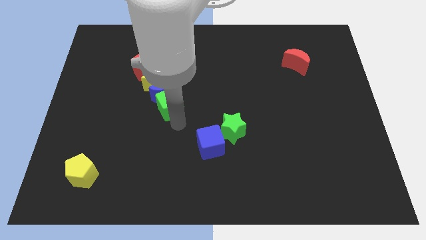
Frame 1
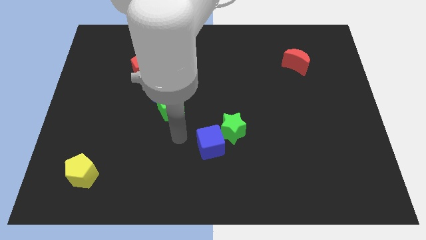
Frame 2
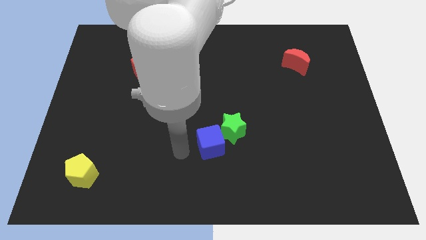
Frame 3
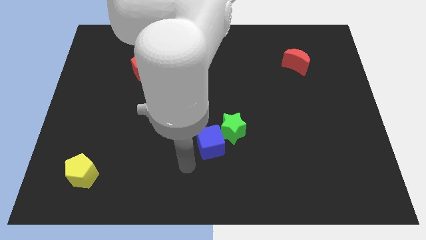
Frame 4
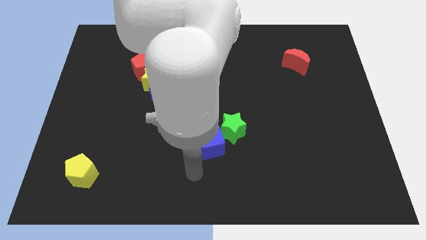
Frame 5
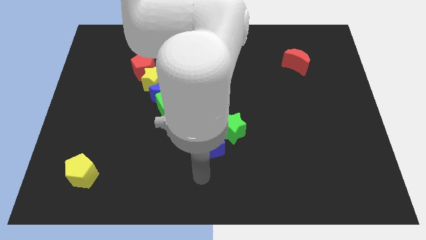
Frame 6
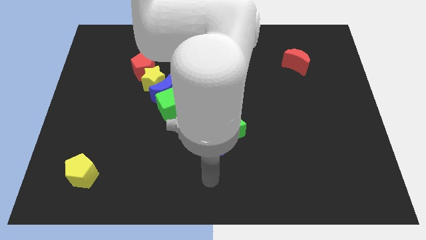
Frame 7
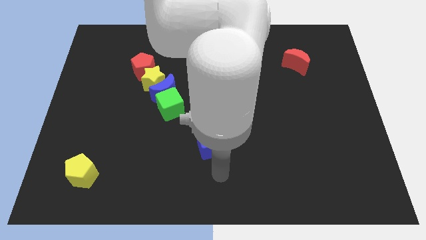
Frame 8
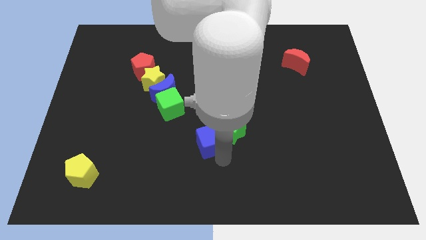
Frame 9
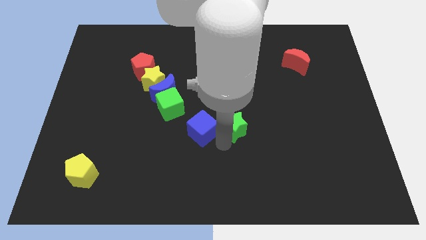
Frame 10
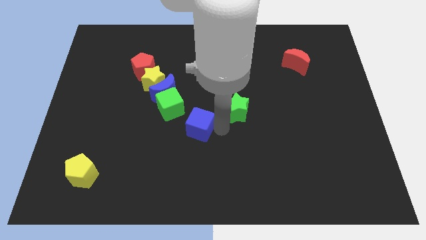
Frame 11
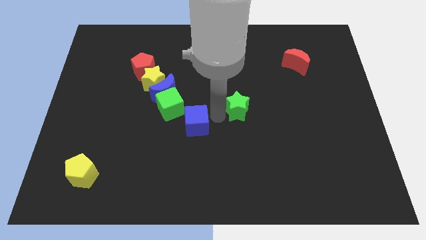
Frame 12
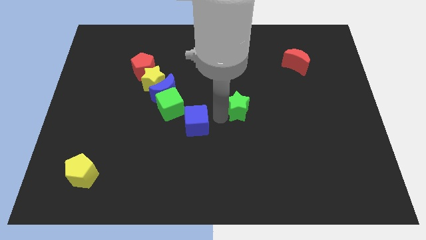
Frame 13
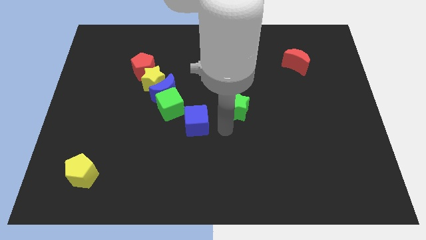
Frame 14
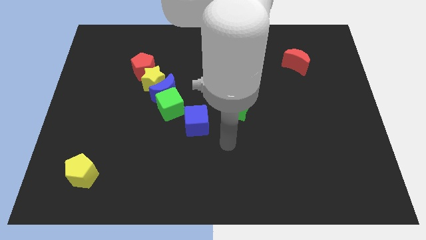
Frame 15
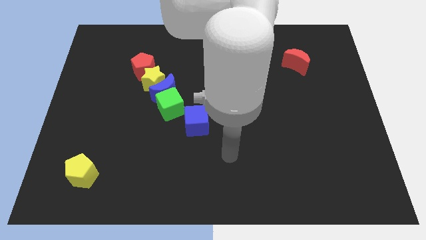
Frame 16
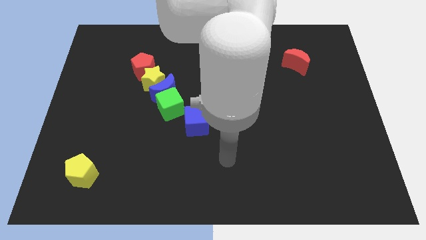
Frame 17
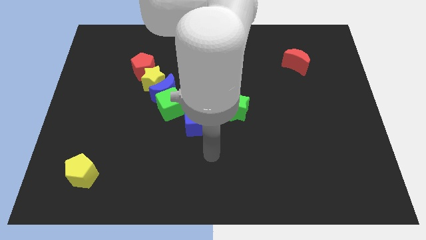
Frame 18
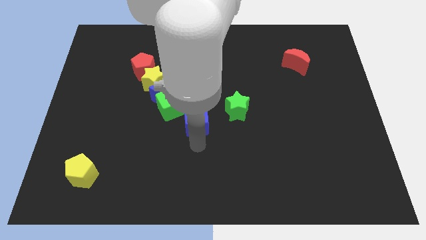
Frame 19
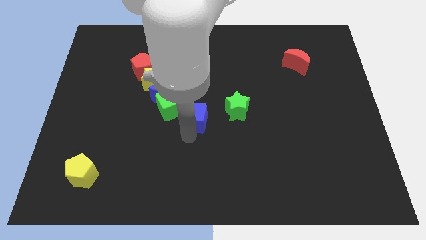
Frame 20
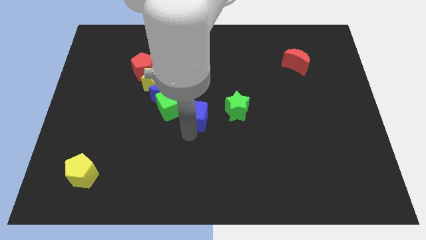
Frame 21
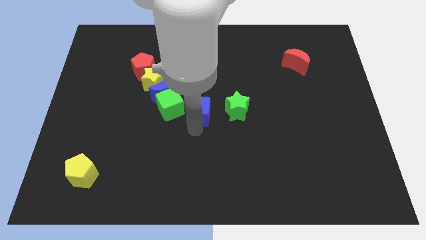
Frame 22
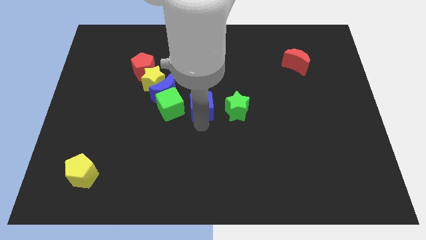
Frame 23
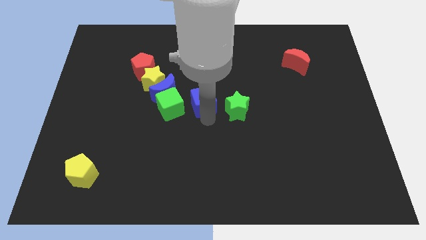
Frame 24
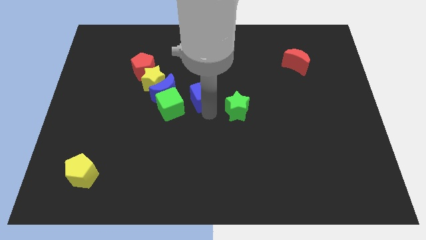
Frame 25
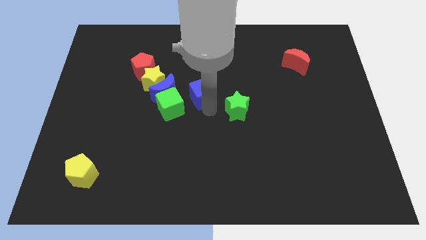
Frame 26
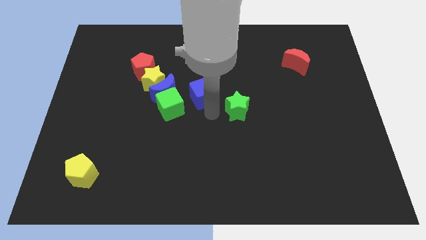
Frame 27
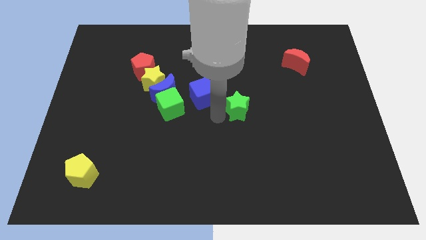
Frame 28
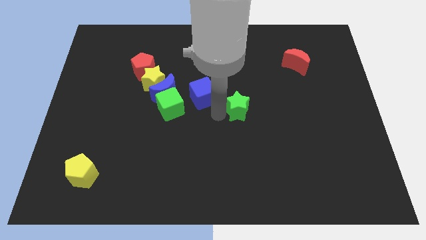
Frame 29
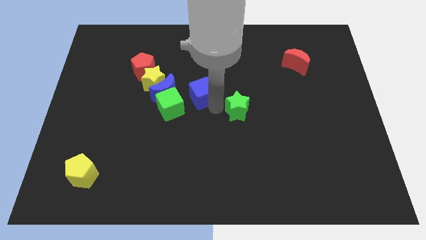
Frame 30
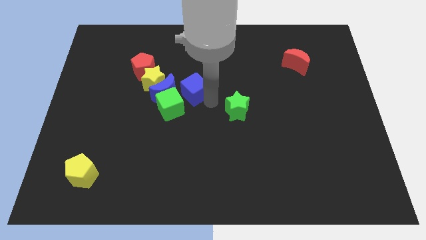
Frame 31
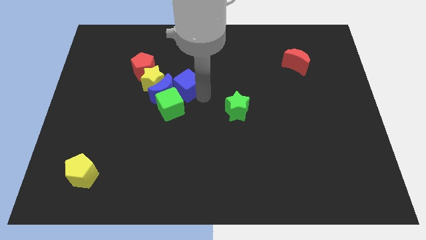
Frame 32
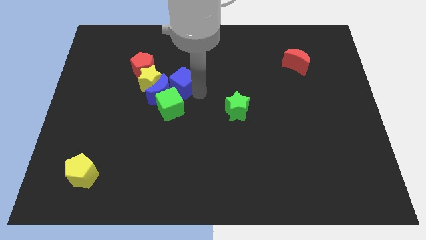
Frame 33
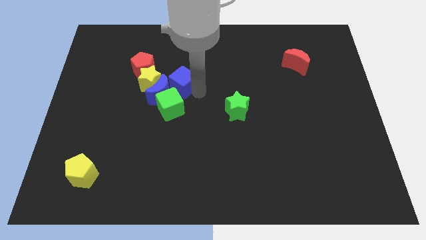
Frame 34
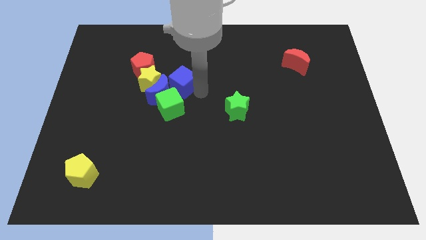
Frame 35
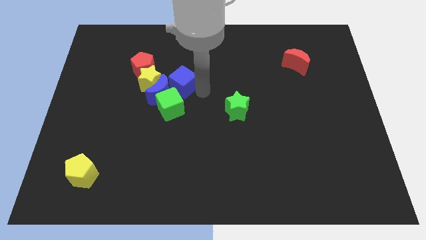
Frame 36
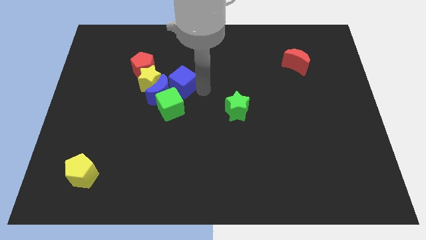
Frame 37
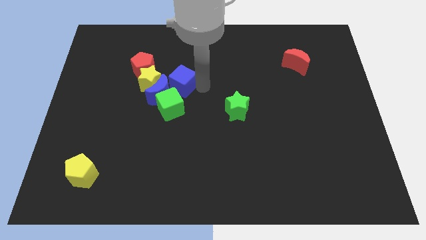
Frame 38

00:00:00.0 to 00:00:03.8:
push the blue cube into the blue crescent

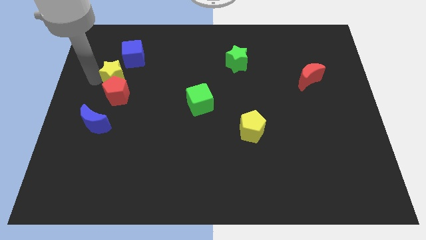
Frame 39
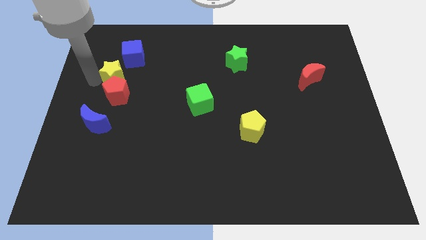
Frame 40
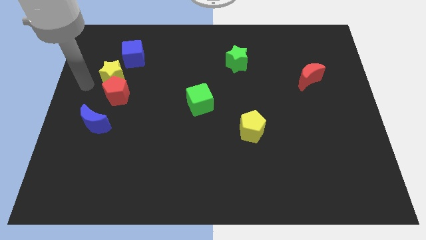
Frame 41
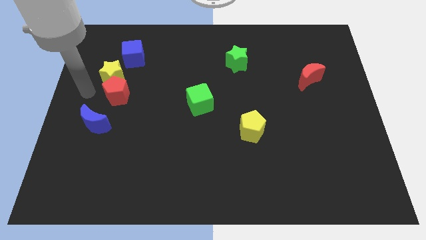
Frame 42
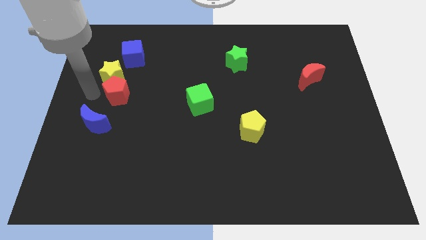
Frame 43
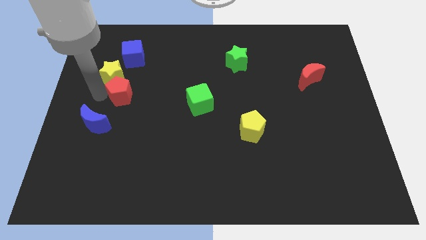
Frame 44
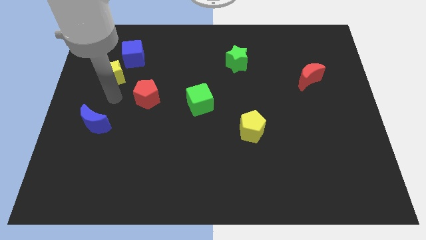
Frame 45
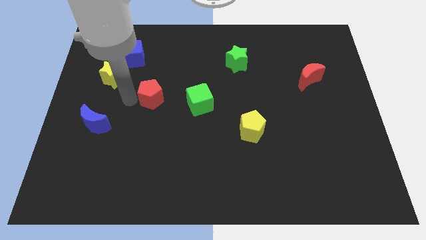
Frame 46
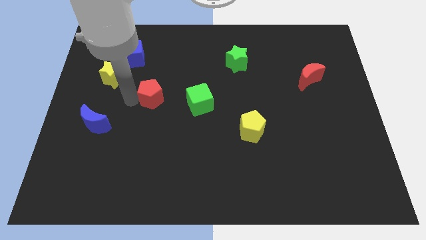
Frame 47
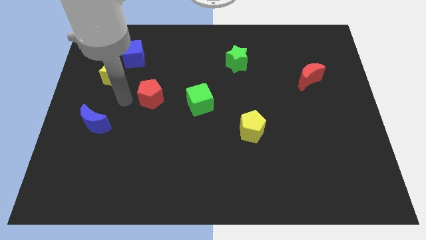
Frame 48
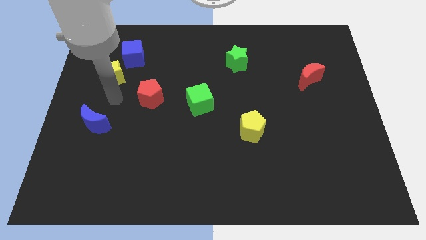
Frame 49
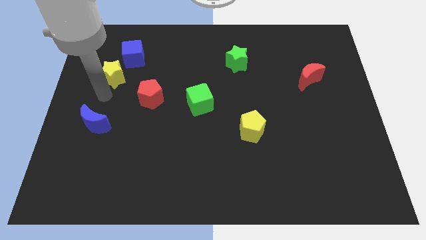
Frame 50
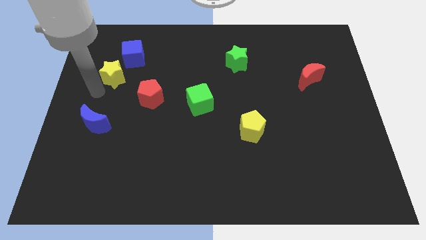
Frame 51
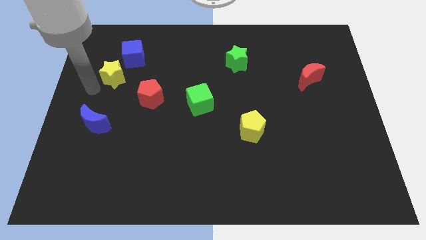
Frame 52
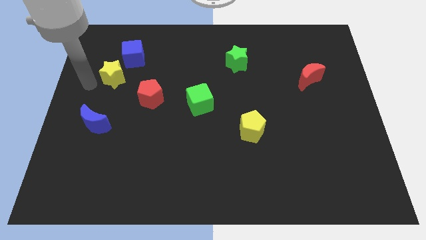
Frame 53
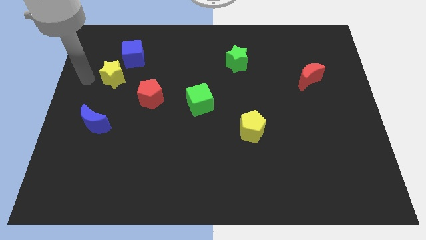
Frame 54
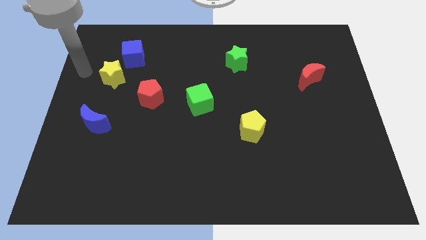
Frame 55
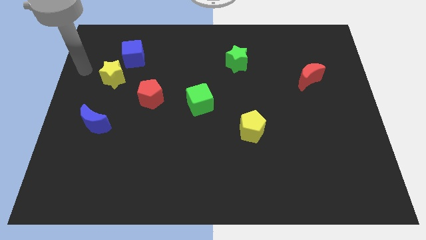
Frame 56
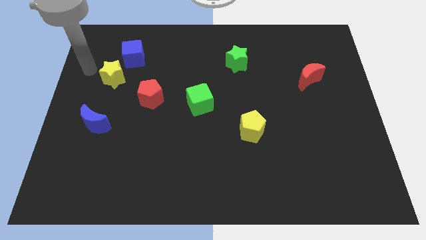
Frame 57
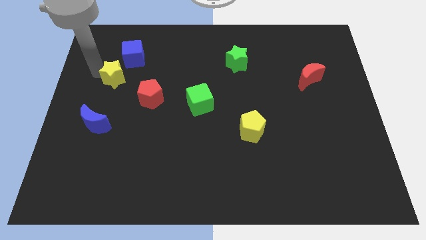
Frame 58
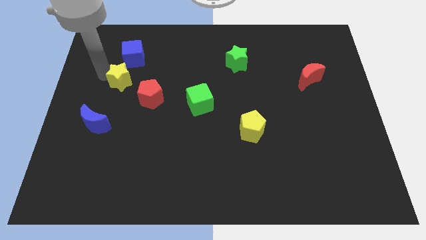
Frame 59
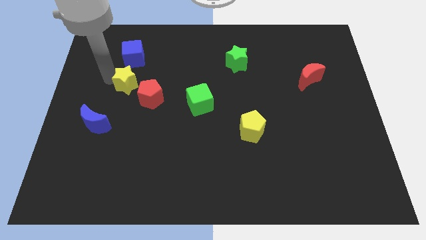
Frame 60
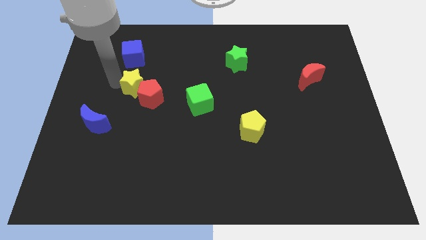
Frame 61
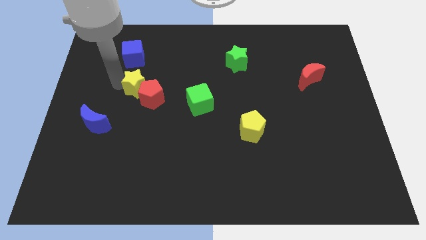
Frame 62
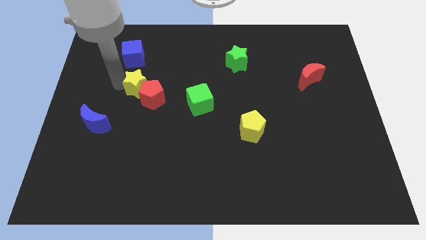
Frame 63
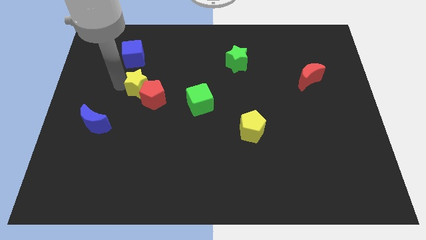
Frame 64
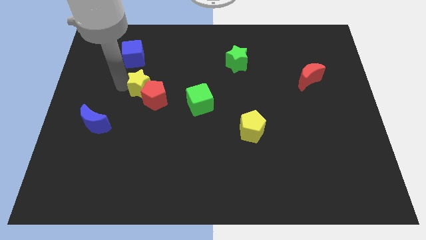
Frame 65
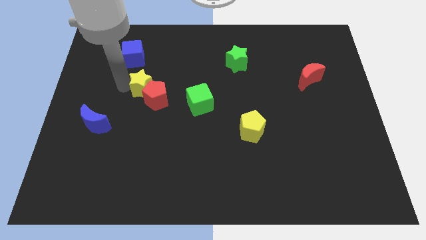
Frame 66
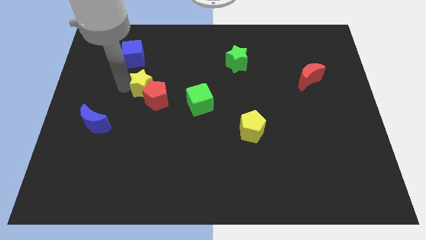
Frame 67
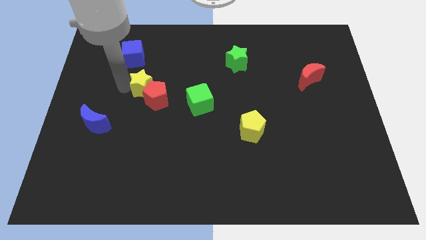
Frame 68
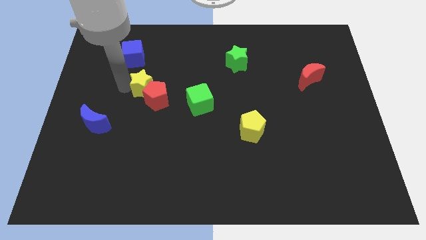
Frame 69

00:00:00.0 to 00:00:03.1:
separate the red pentagon from yellow star

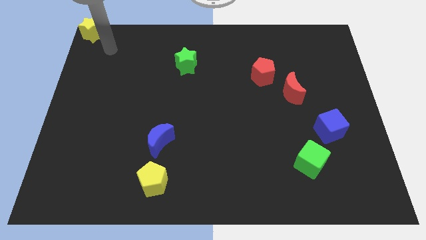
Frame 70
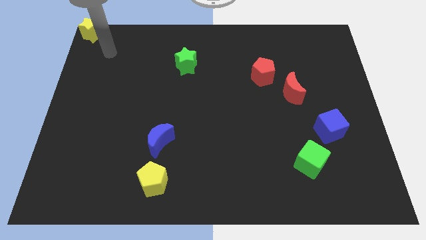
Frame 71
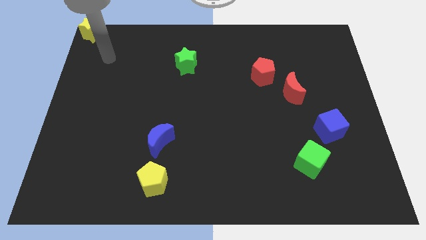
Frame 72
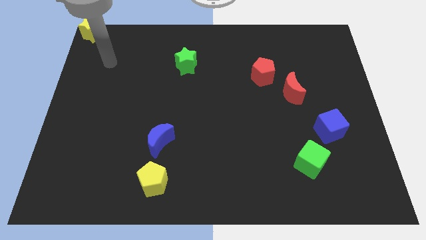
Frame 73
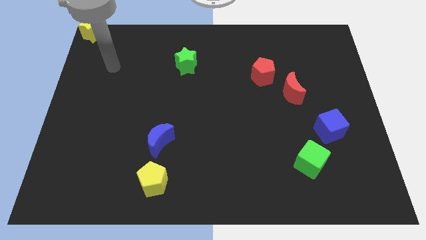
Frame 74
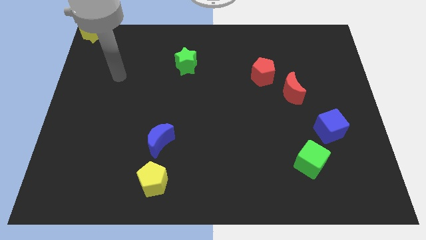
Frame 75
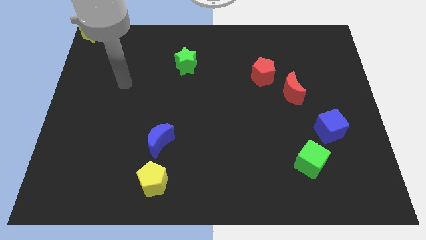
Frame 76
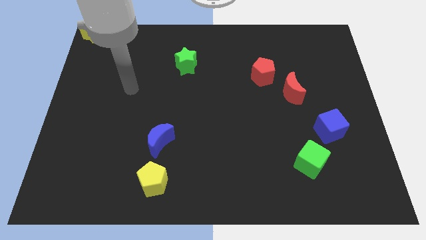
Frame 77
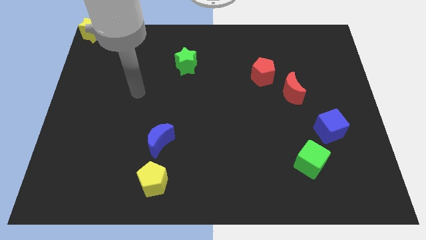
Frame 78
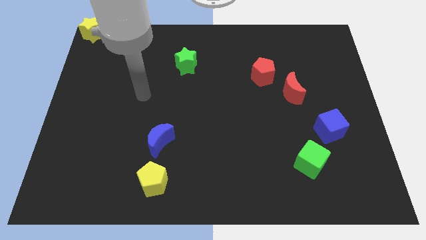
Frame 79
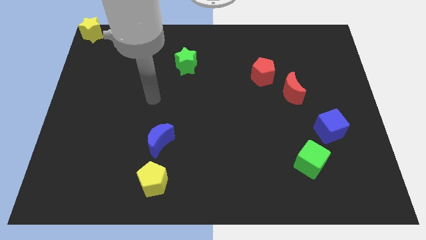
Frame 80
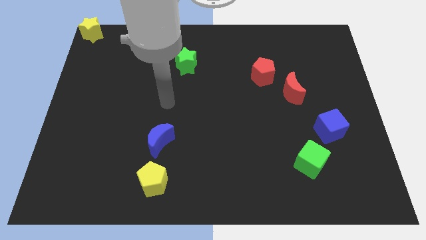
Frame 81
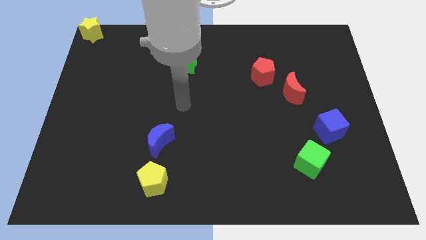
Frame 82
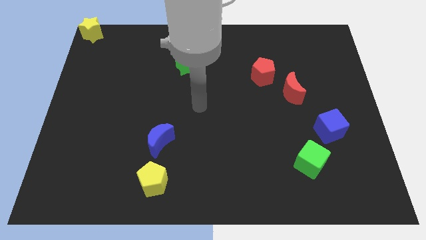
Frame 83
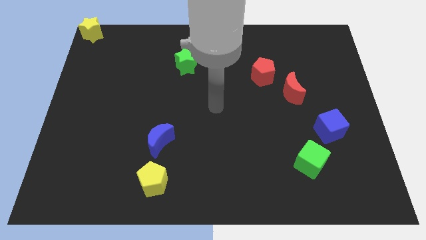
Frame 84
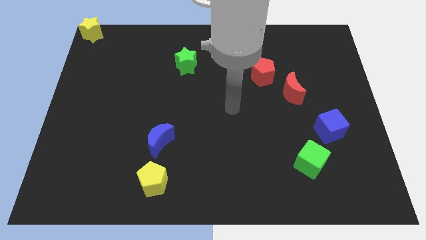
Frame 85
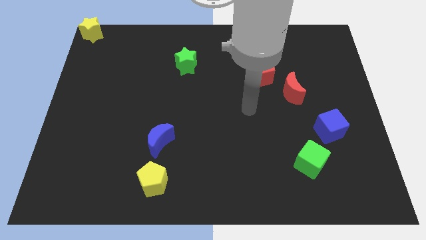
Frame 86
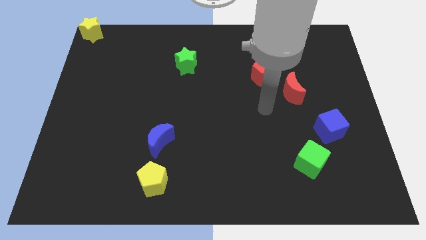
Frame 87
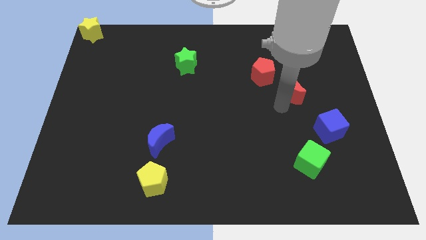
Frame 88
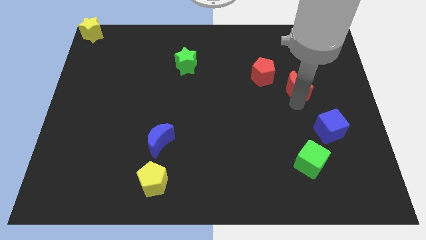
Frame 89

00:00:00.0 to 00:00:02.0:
tap the red crescent
